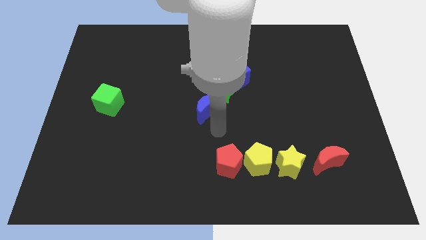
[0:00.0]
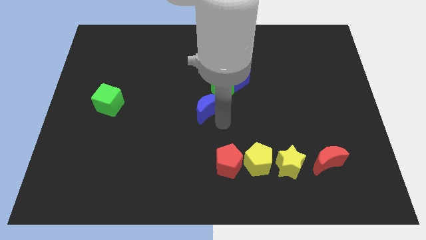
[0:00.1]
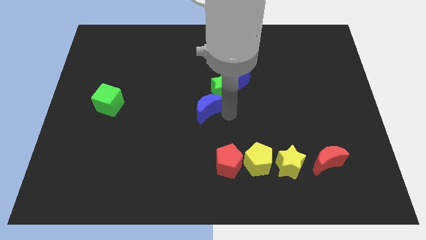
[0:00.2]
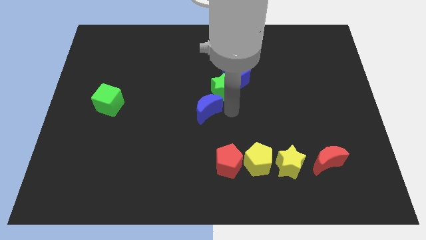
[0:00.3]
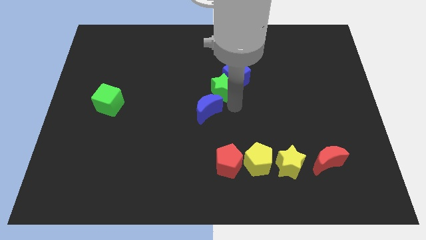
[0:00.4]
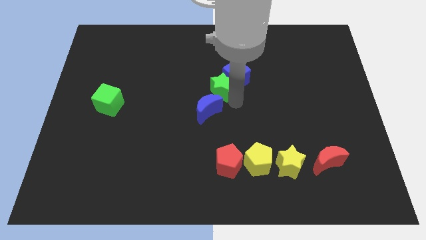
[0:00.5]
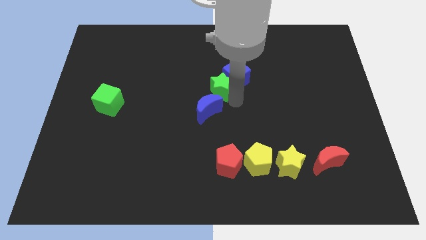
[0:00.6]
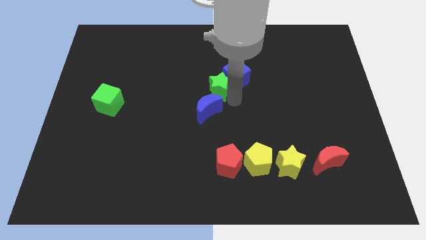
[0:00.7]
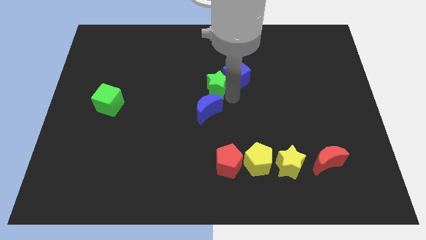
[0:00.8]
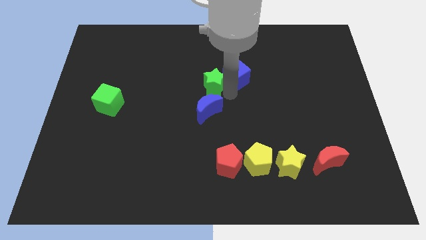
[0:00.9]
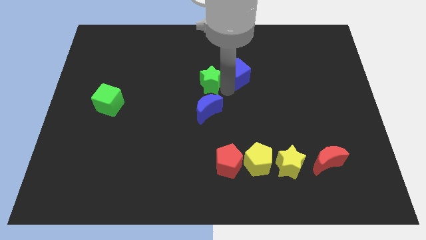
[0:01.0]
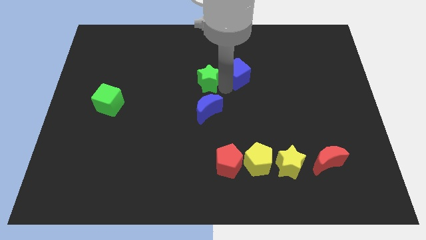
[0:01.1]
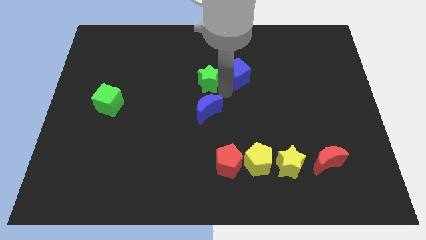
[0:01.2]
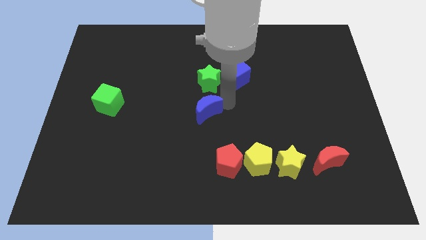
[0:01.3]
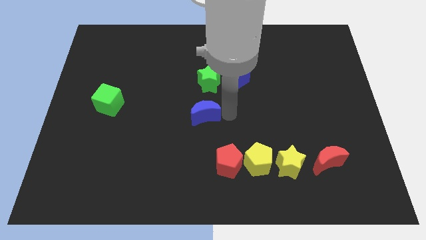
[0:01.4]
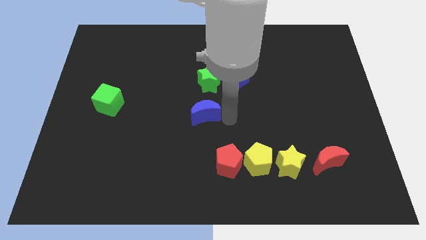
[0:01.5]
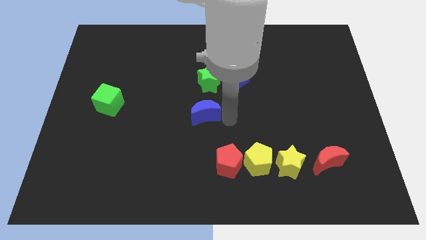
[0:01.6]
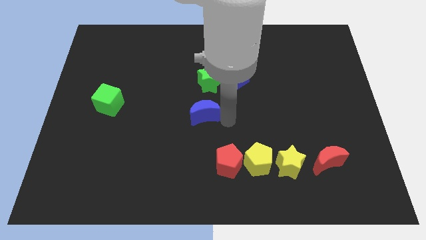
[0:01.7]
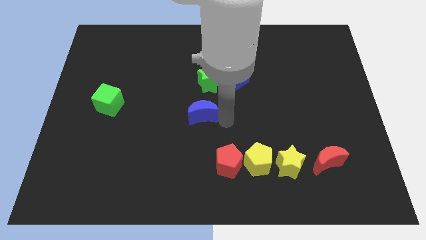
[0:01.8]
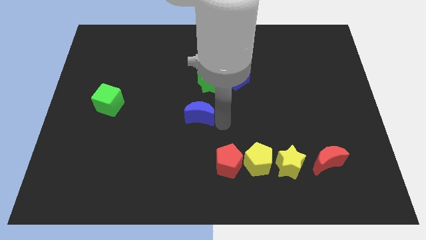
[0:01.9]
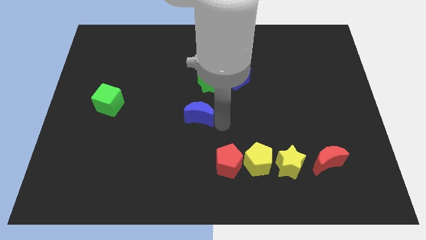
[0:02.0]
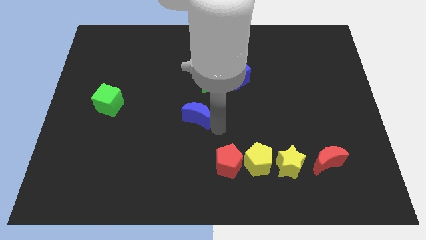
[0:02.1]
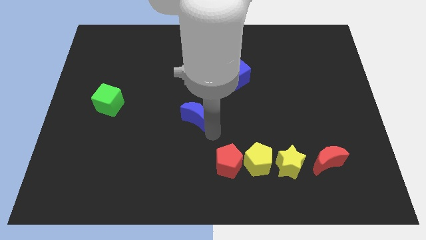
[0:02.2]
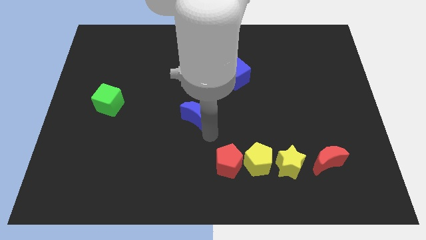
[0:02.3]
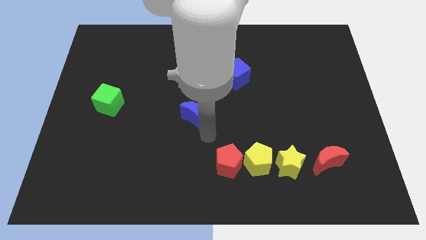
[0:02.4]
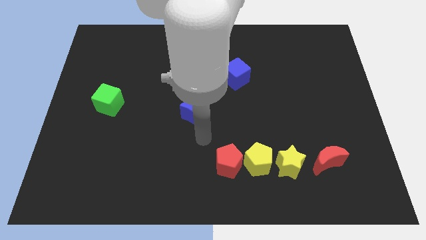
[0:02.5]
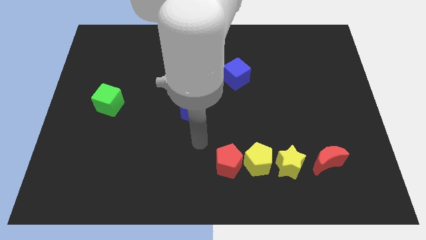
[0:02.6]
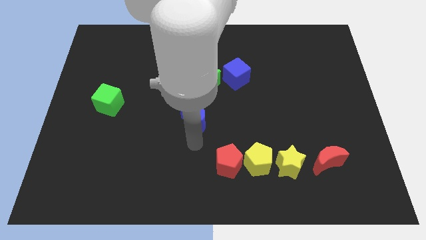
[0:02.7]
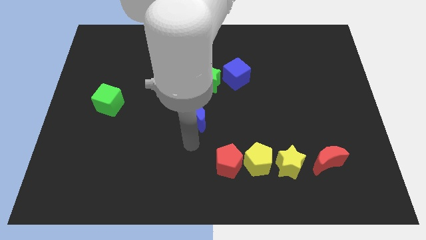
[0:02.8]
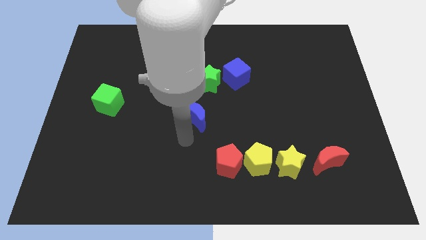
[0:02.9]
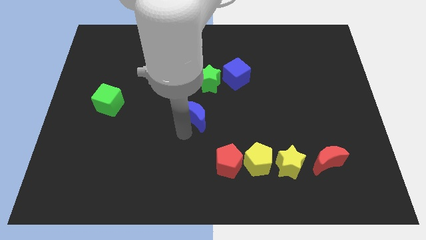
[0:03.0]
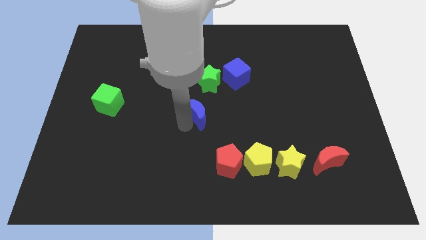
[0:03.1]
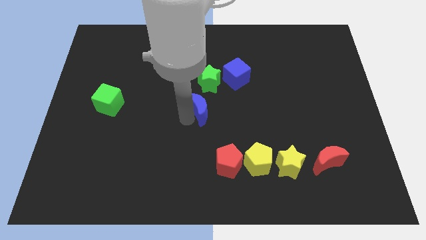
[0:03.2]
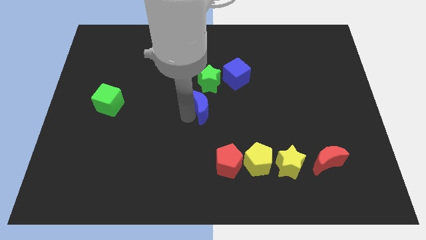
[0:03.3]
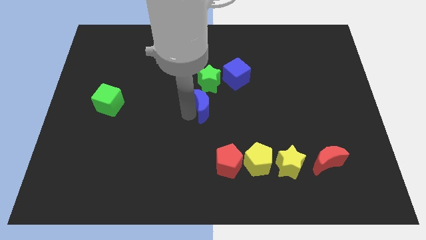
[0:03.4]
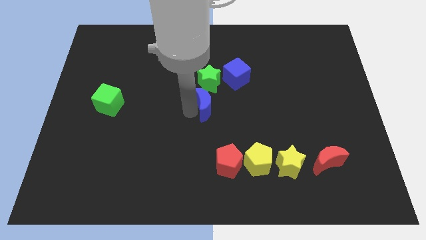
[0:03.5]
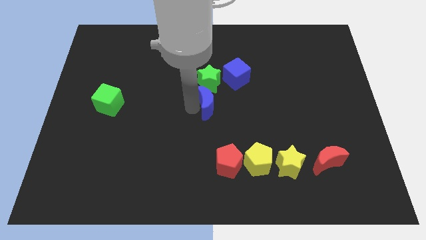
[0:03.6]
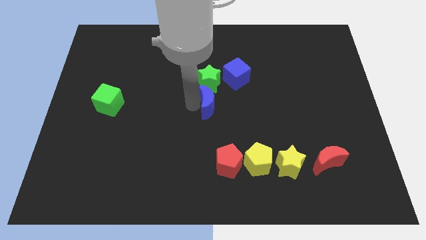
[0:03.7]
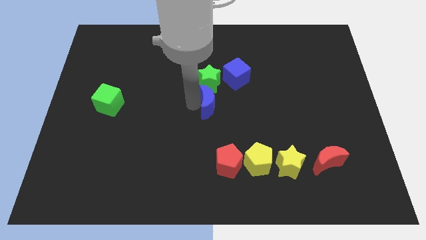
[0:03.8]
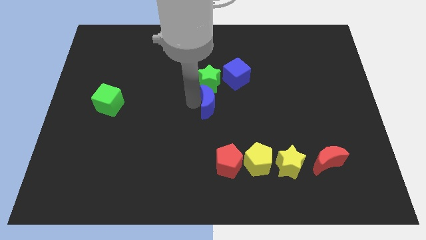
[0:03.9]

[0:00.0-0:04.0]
push the green star and blue crescent towards the blue cube

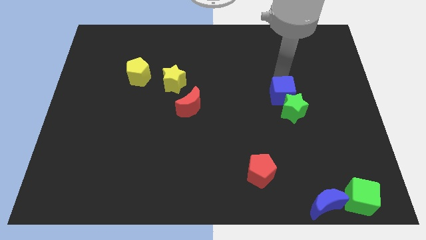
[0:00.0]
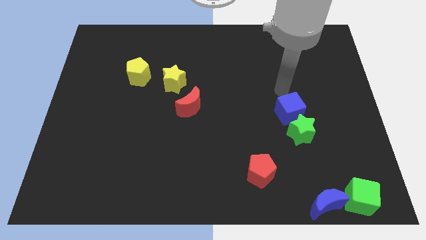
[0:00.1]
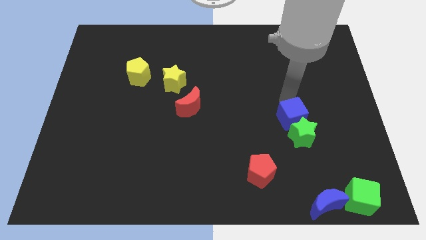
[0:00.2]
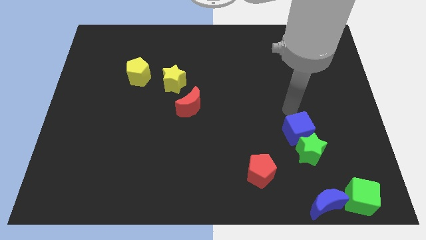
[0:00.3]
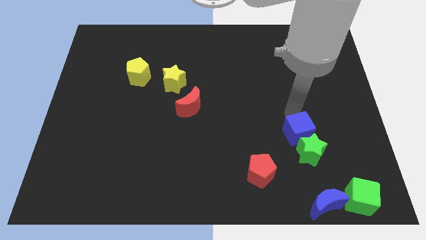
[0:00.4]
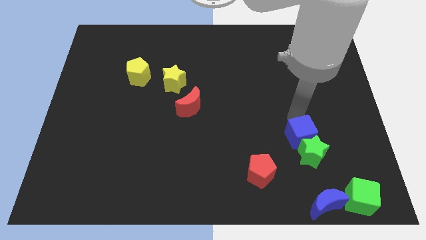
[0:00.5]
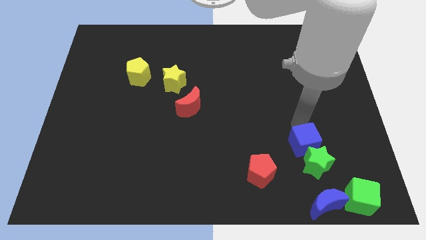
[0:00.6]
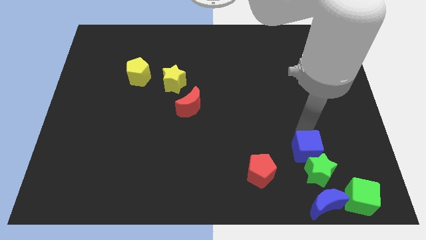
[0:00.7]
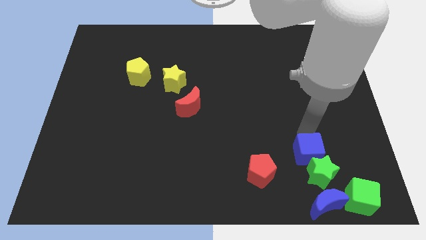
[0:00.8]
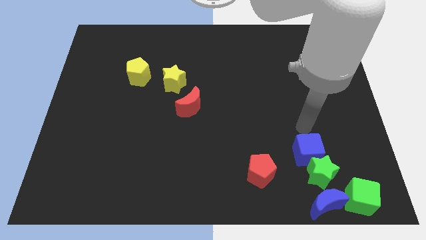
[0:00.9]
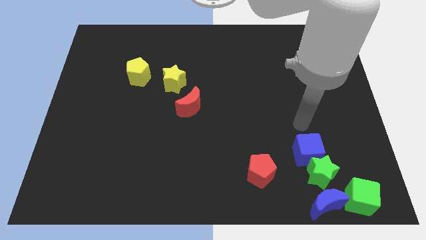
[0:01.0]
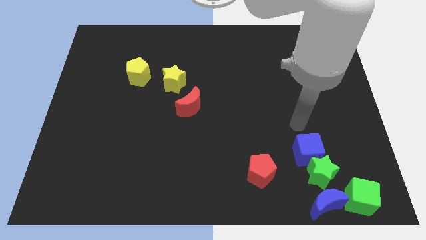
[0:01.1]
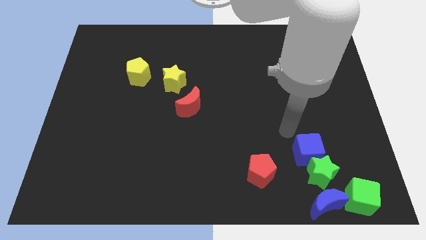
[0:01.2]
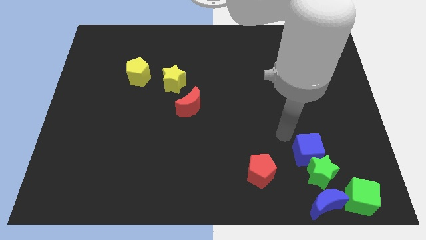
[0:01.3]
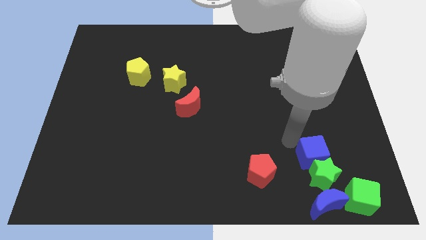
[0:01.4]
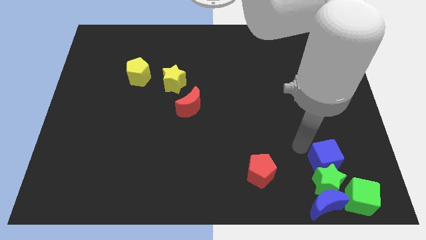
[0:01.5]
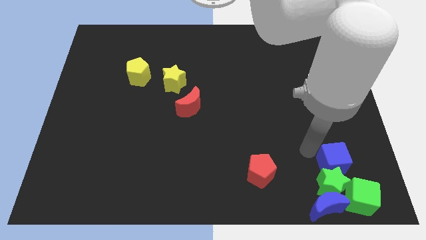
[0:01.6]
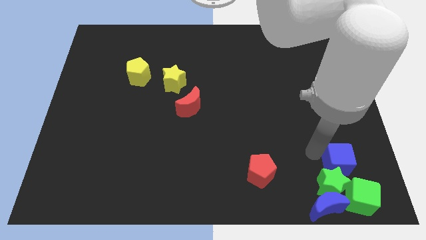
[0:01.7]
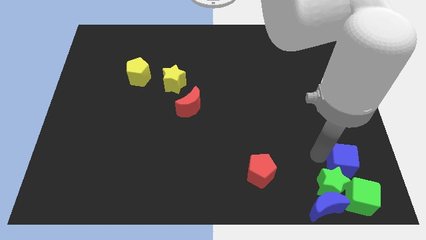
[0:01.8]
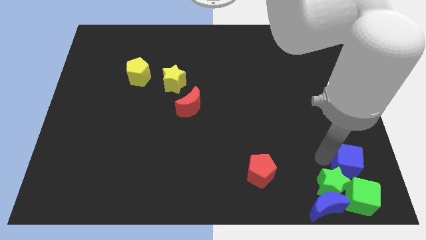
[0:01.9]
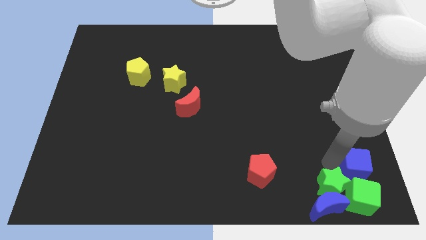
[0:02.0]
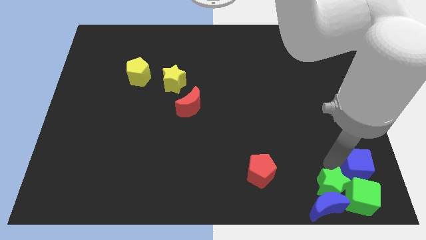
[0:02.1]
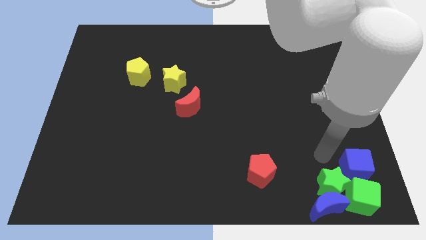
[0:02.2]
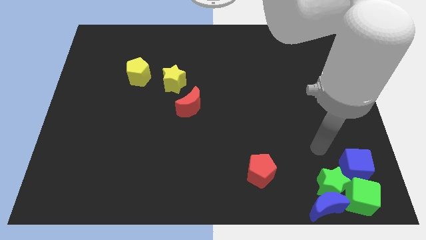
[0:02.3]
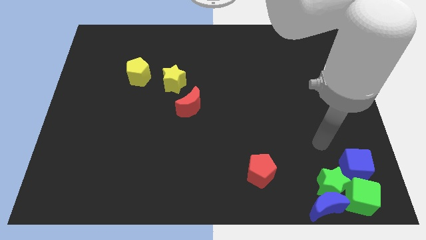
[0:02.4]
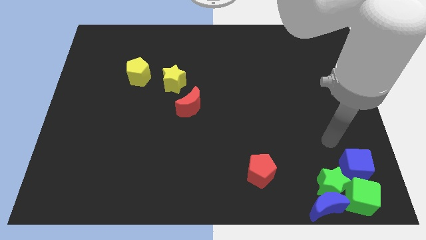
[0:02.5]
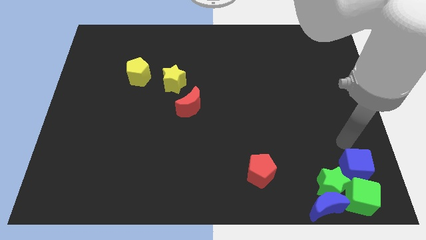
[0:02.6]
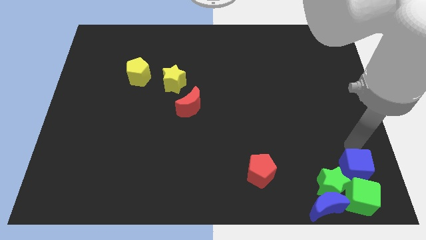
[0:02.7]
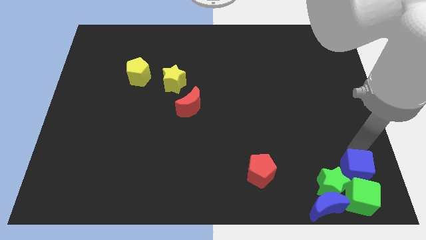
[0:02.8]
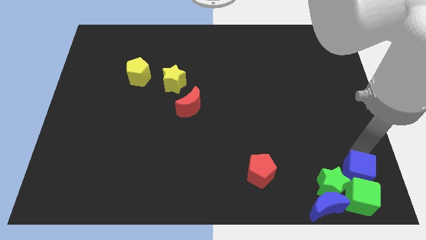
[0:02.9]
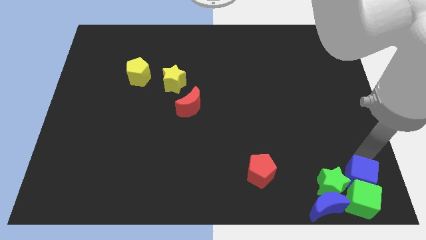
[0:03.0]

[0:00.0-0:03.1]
push the green star and the blue cube into the green cube and the blue moon

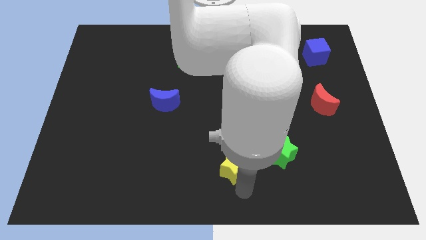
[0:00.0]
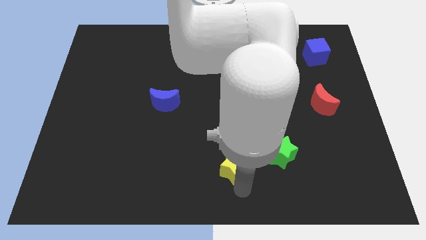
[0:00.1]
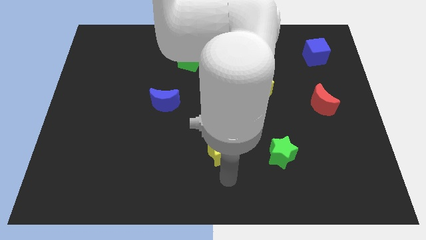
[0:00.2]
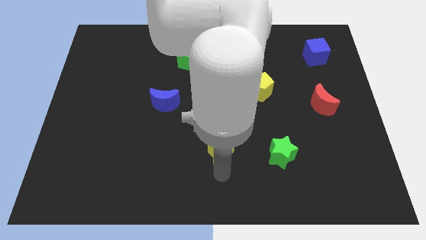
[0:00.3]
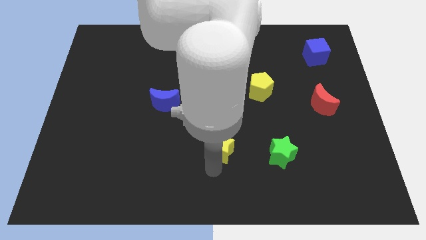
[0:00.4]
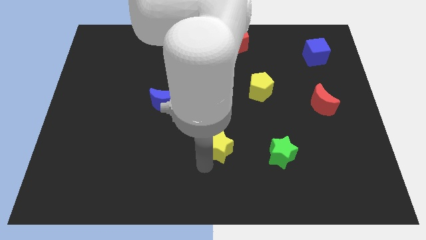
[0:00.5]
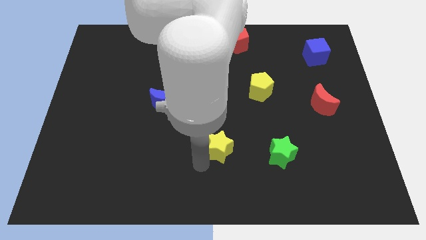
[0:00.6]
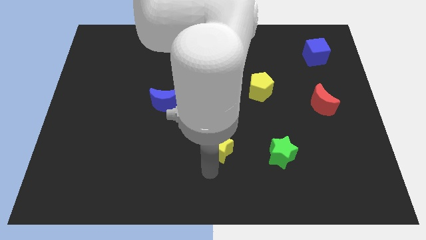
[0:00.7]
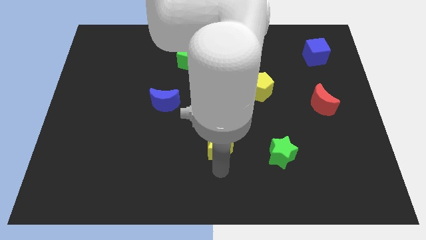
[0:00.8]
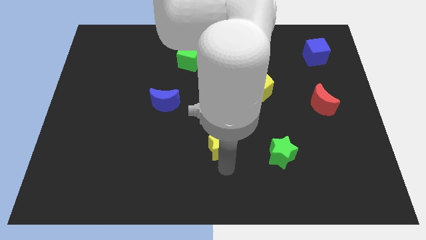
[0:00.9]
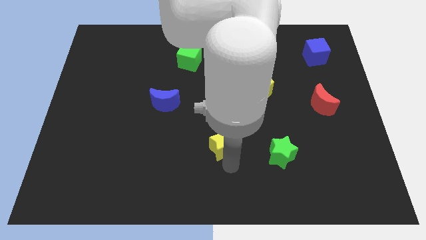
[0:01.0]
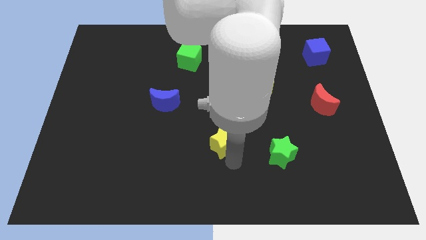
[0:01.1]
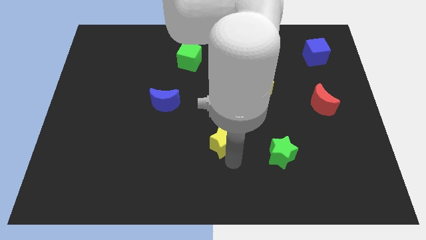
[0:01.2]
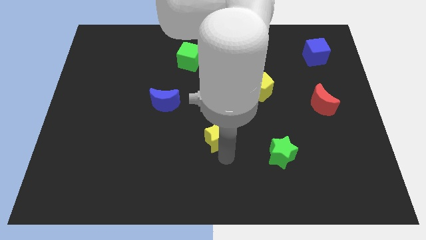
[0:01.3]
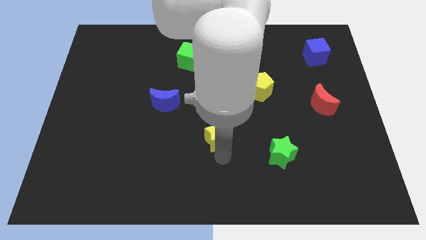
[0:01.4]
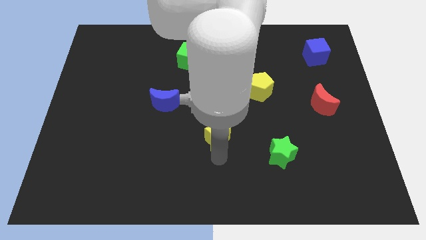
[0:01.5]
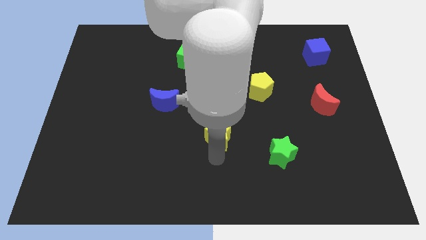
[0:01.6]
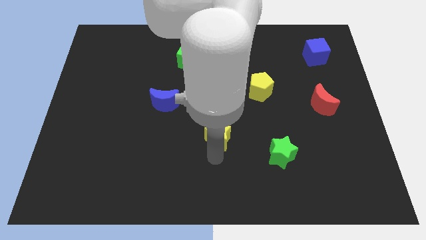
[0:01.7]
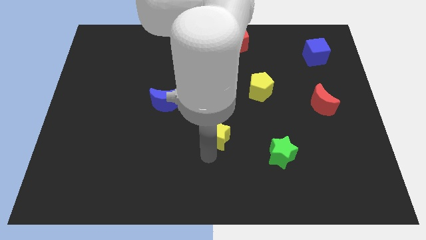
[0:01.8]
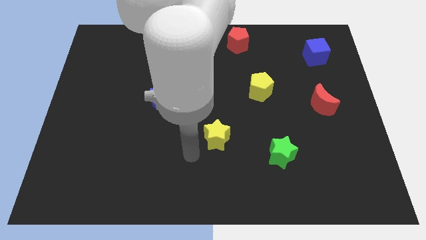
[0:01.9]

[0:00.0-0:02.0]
place the yellow star diagonally on the bottom left side of the yellow pentagon
